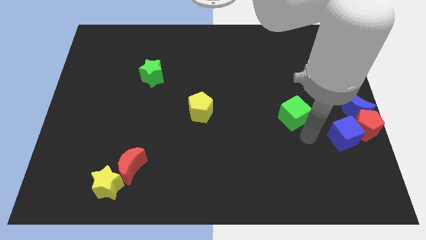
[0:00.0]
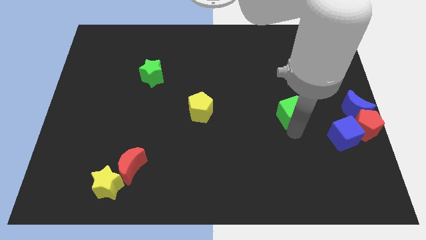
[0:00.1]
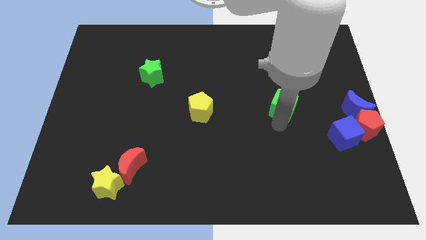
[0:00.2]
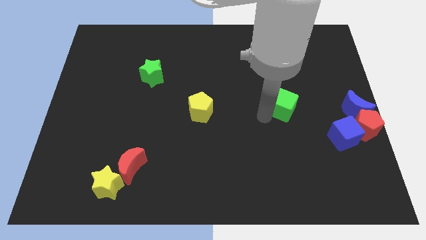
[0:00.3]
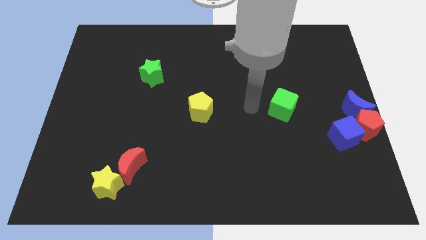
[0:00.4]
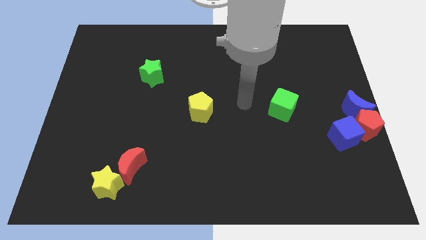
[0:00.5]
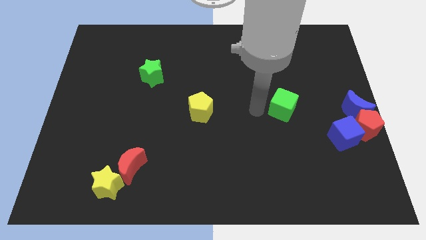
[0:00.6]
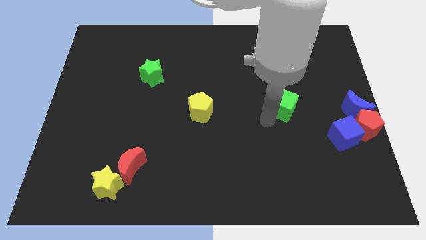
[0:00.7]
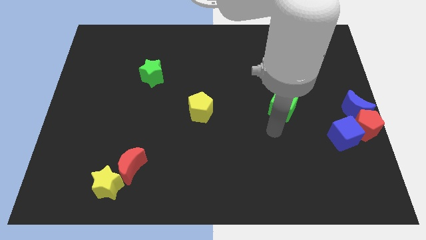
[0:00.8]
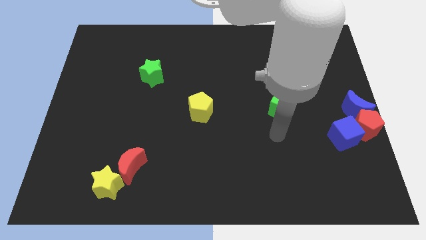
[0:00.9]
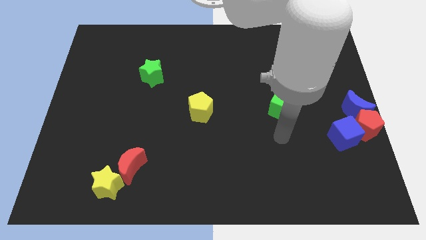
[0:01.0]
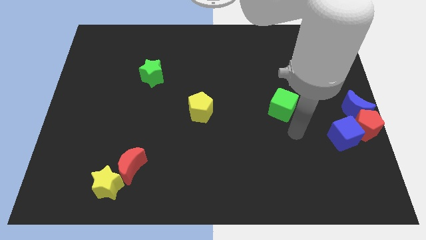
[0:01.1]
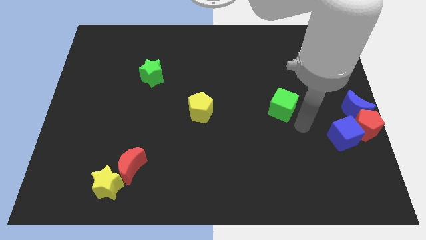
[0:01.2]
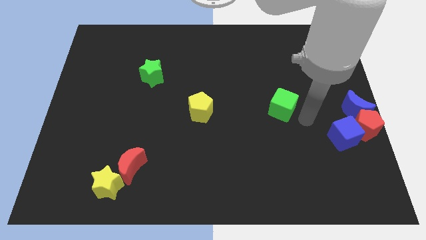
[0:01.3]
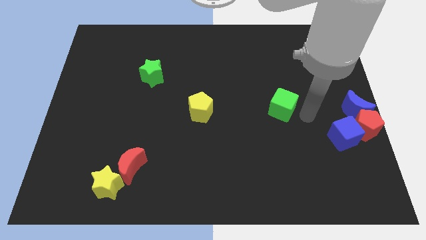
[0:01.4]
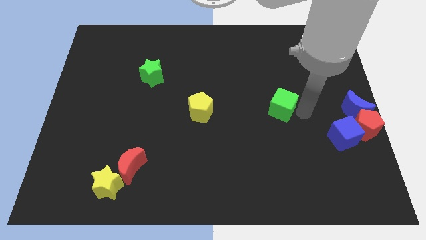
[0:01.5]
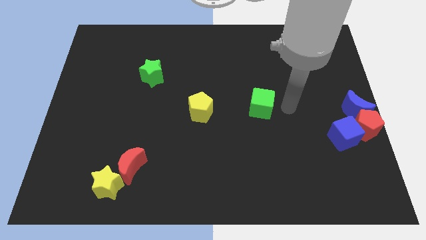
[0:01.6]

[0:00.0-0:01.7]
move the green cube towards yellow pentagon

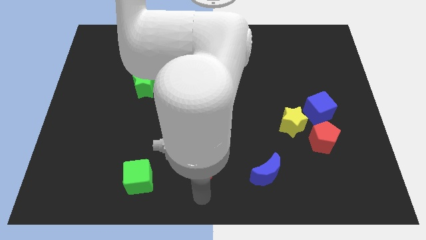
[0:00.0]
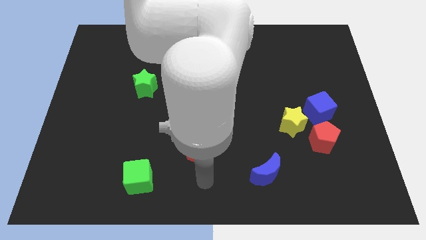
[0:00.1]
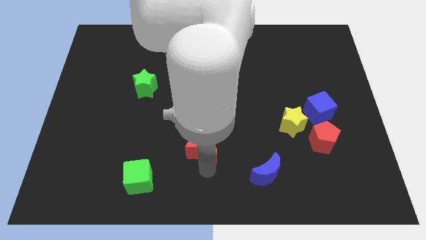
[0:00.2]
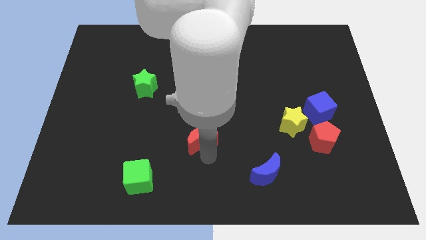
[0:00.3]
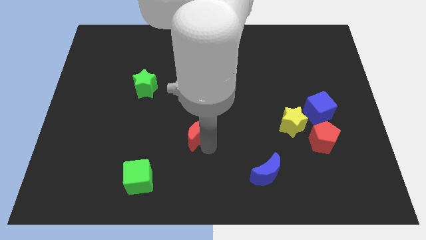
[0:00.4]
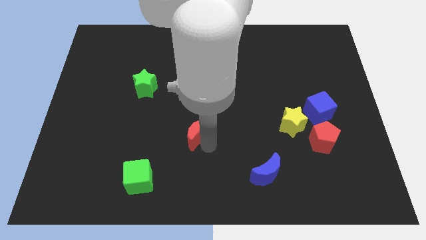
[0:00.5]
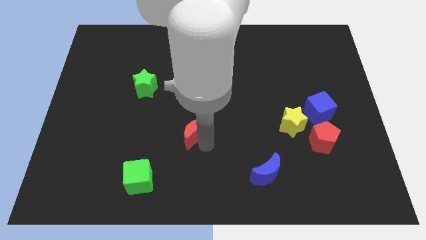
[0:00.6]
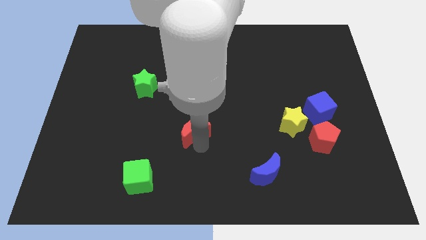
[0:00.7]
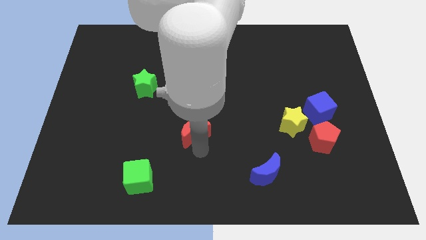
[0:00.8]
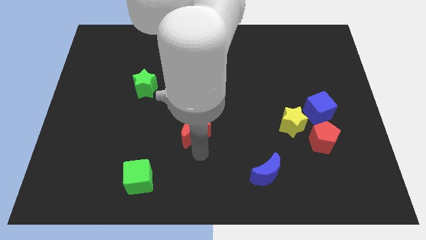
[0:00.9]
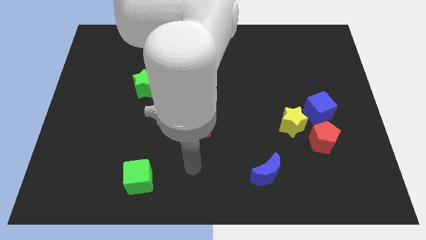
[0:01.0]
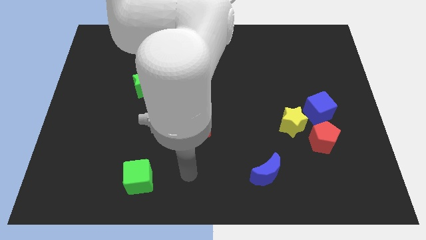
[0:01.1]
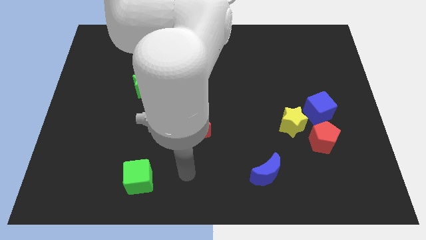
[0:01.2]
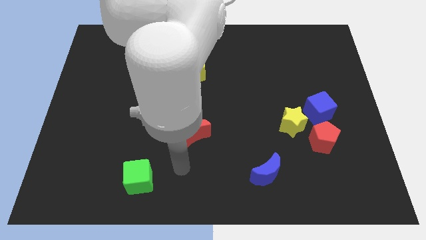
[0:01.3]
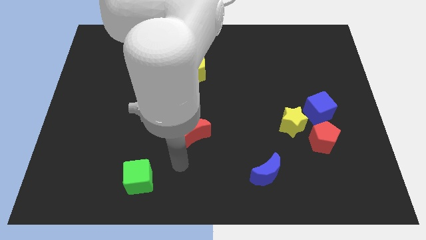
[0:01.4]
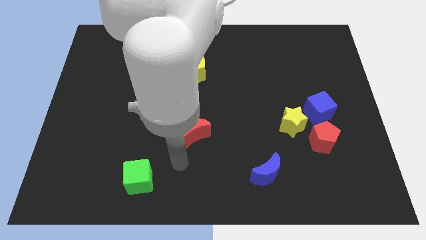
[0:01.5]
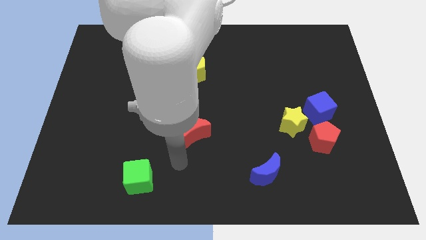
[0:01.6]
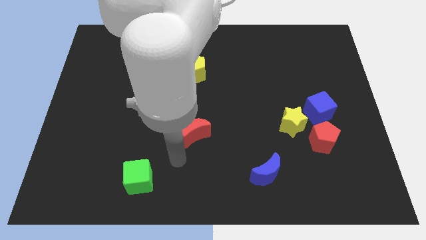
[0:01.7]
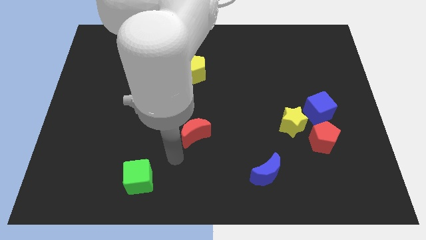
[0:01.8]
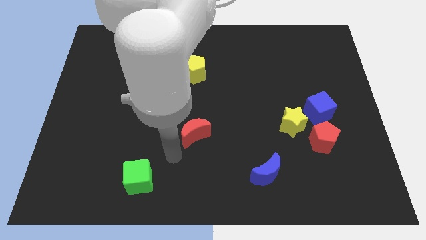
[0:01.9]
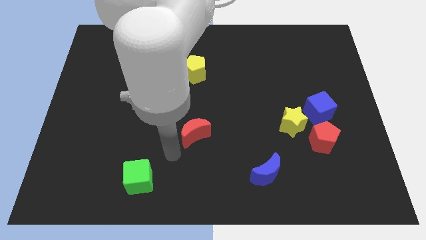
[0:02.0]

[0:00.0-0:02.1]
place the red crescent to the left of the yellow star

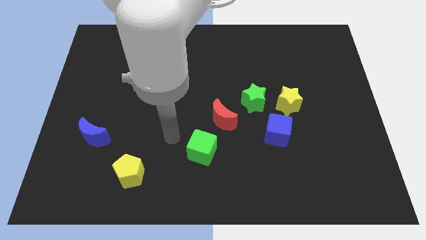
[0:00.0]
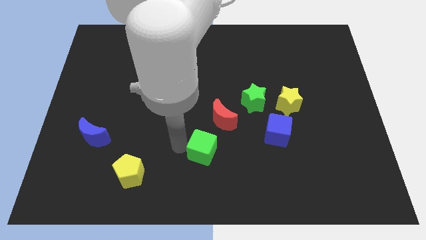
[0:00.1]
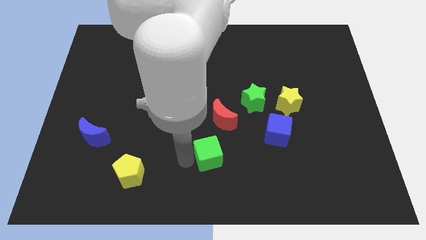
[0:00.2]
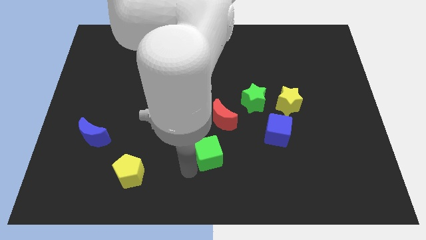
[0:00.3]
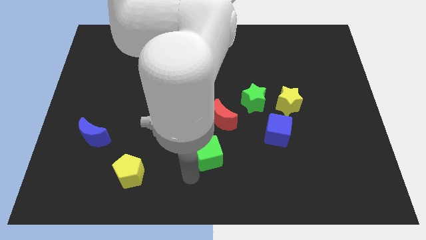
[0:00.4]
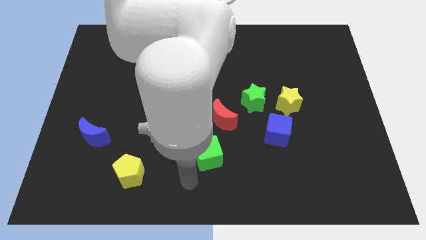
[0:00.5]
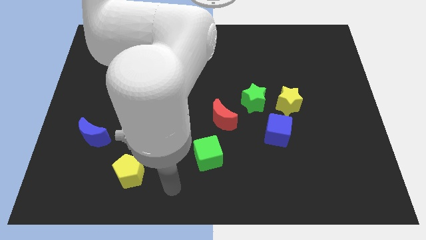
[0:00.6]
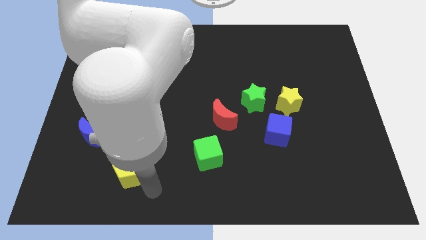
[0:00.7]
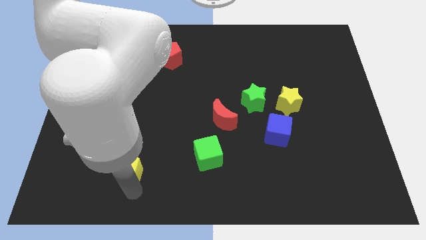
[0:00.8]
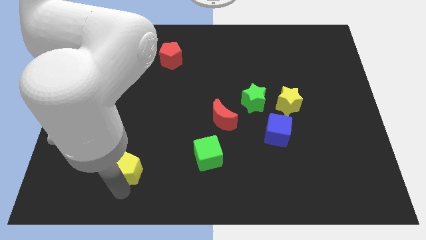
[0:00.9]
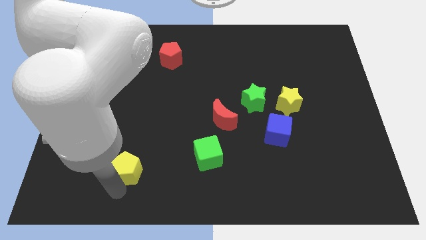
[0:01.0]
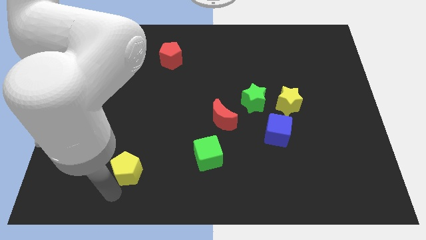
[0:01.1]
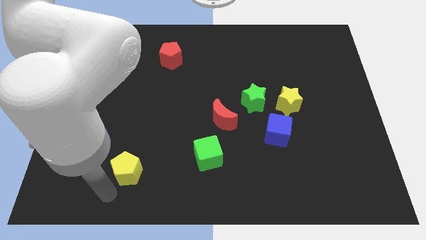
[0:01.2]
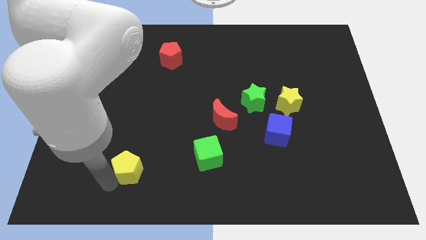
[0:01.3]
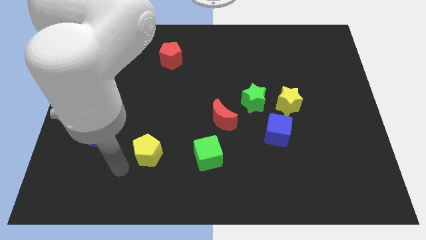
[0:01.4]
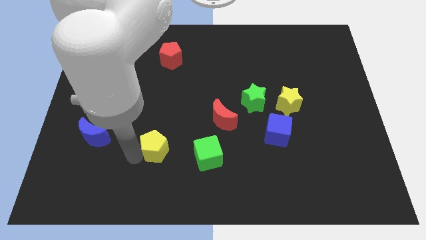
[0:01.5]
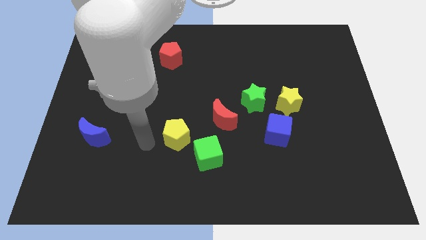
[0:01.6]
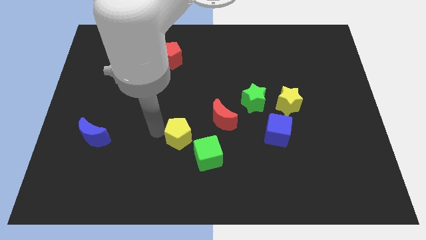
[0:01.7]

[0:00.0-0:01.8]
place the yellow pentagon to the top left of the green cube

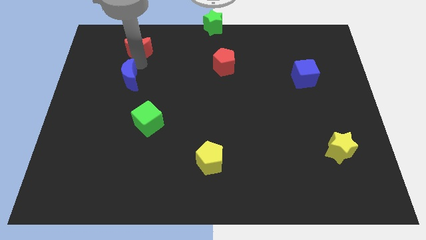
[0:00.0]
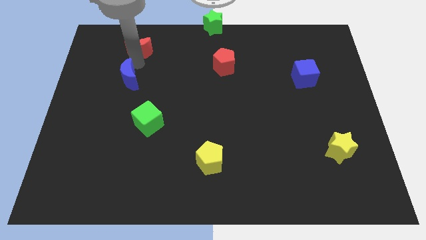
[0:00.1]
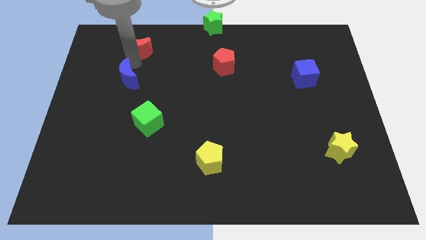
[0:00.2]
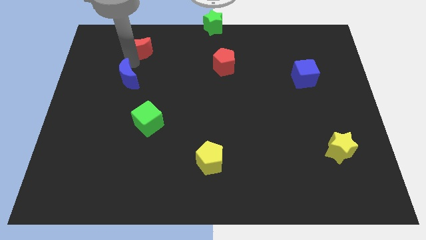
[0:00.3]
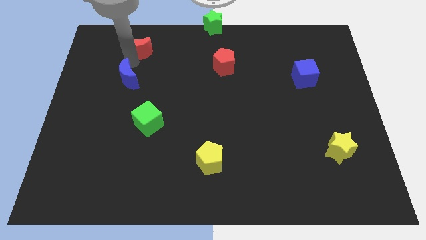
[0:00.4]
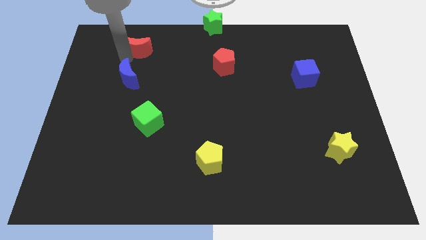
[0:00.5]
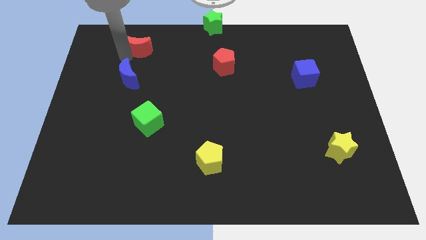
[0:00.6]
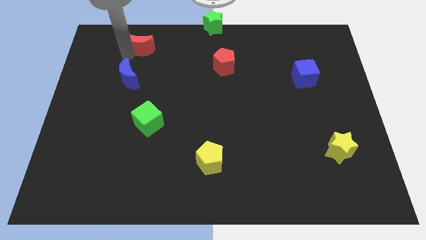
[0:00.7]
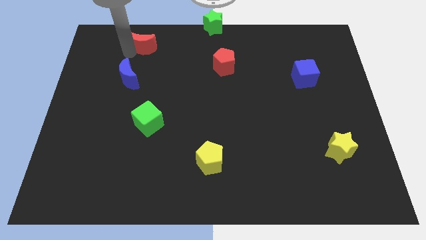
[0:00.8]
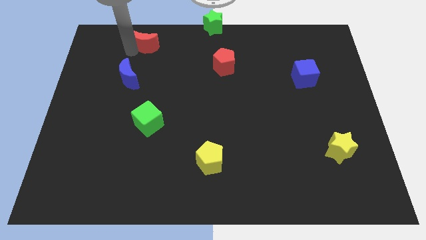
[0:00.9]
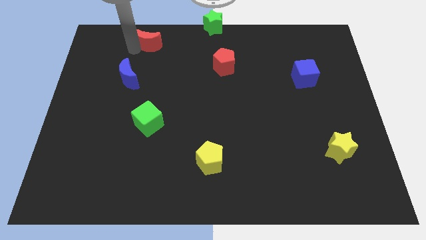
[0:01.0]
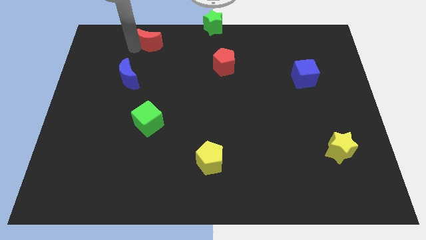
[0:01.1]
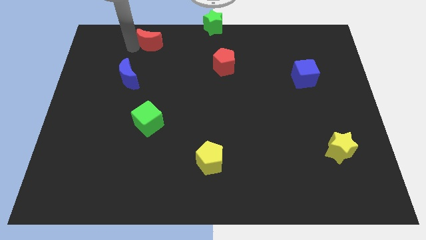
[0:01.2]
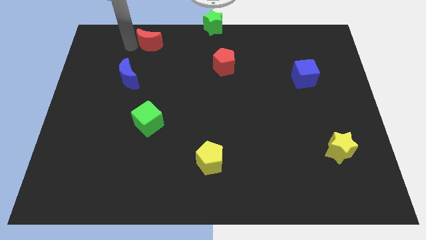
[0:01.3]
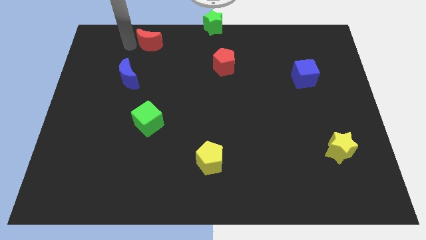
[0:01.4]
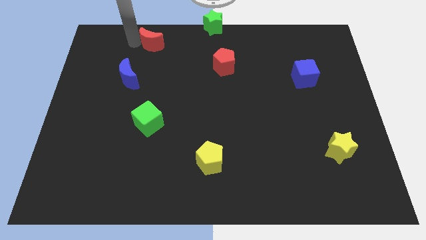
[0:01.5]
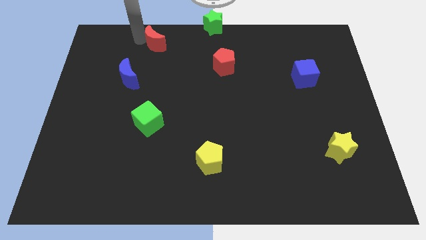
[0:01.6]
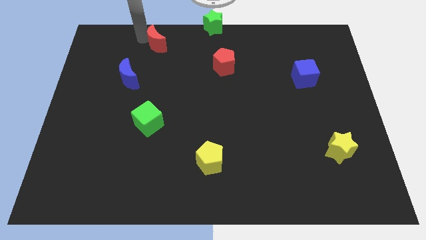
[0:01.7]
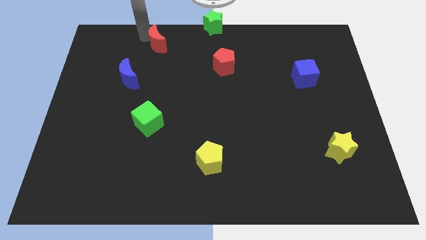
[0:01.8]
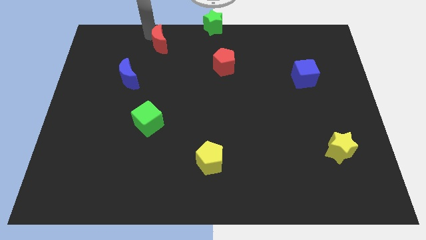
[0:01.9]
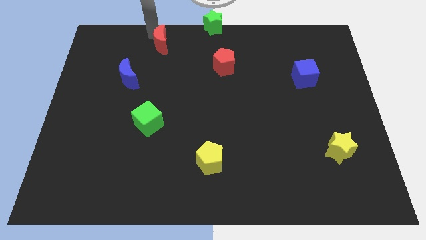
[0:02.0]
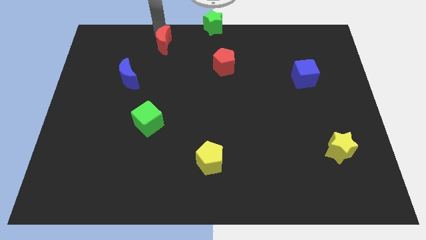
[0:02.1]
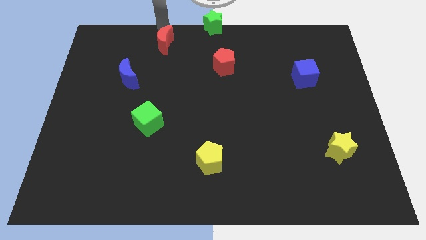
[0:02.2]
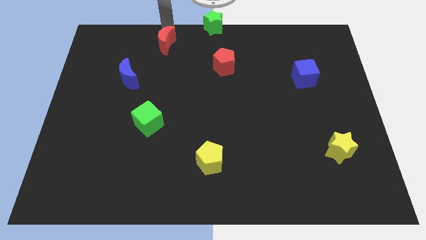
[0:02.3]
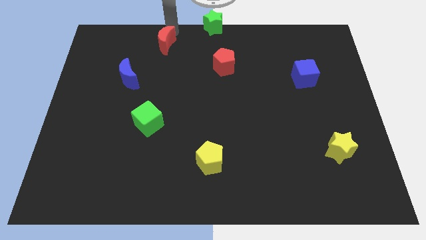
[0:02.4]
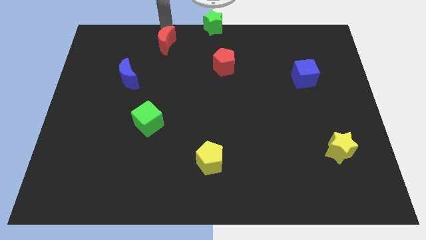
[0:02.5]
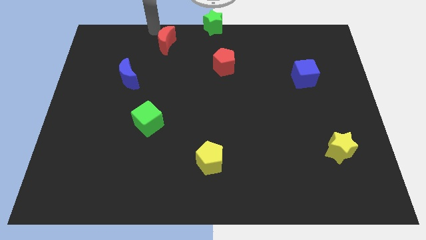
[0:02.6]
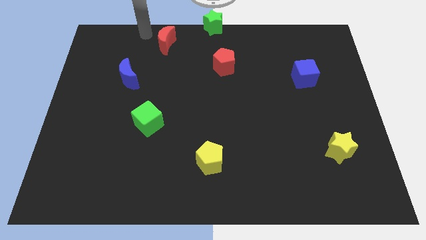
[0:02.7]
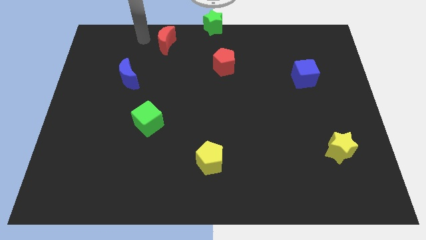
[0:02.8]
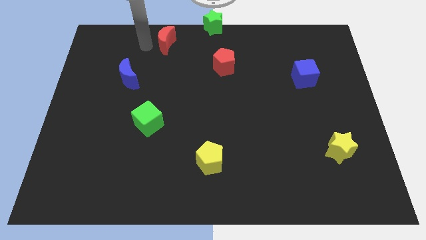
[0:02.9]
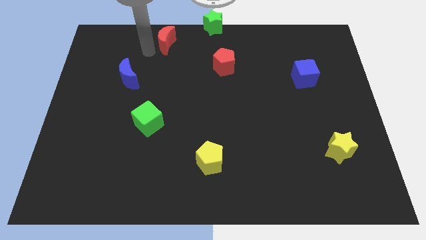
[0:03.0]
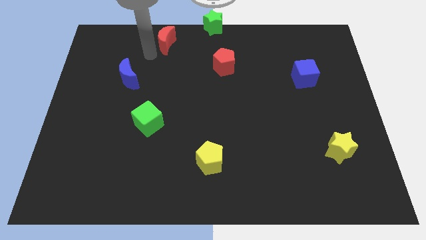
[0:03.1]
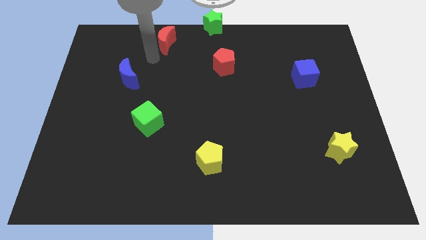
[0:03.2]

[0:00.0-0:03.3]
place the red moon diagonally to the top left of the red pentagon

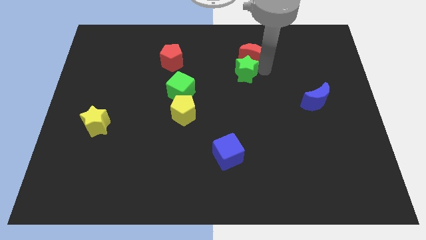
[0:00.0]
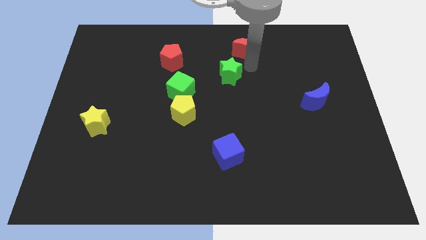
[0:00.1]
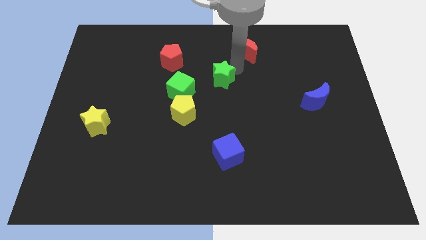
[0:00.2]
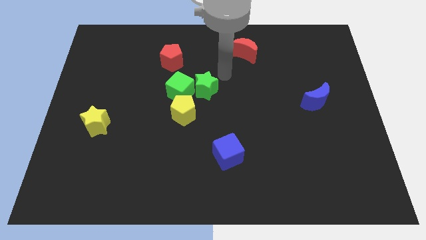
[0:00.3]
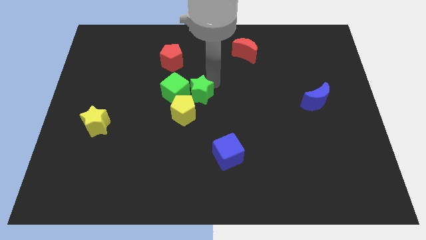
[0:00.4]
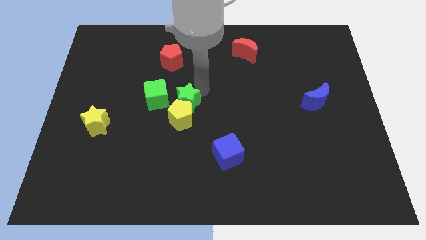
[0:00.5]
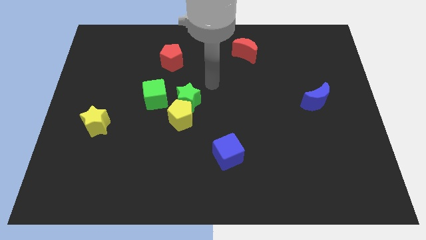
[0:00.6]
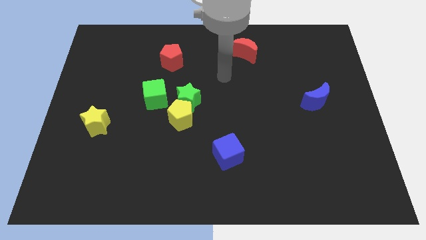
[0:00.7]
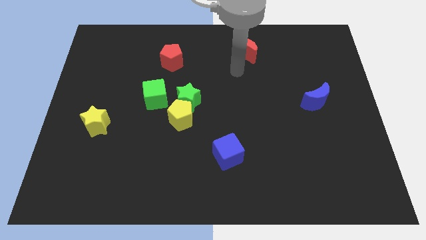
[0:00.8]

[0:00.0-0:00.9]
place green star to the top of yellow pentagon
